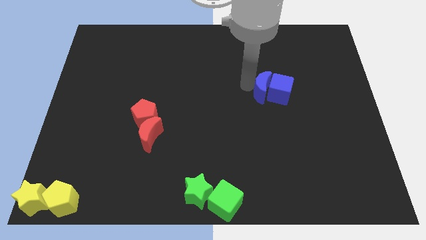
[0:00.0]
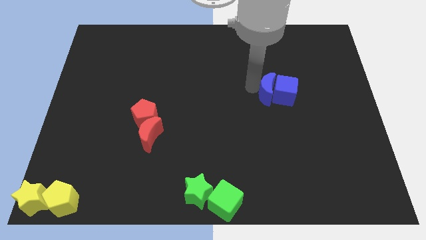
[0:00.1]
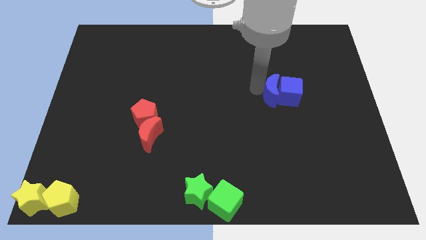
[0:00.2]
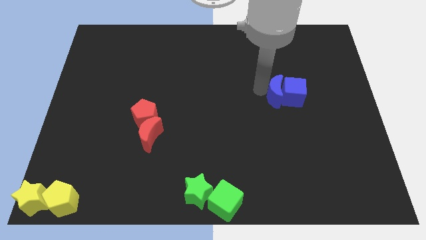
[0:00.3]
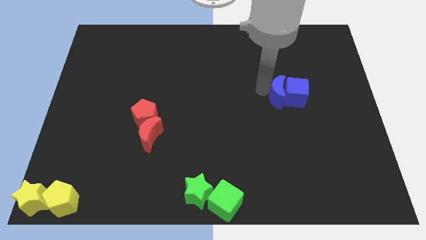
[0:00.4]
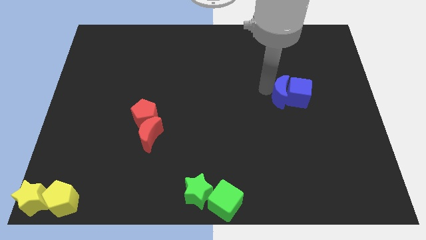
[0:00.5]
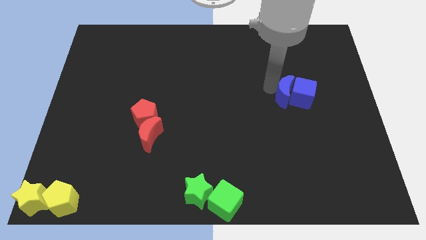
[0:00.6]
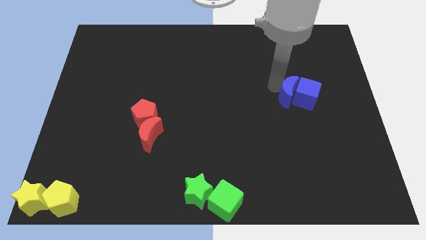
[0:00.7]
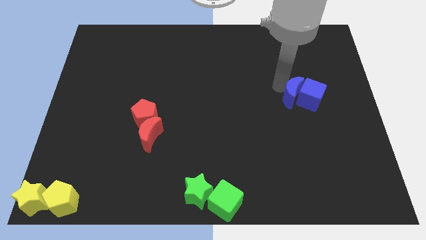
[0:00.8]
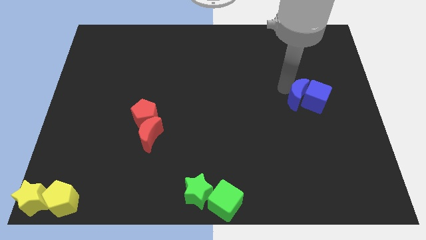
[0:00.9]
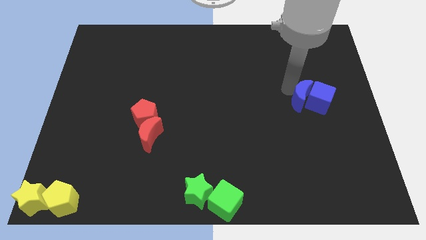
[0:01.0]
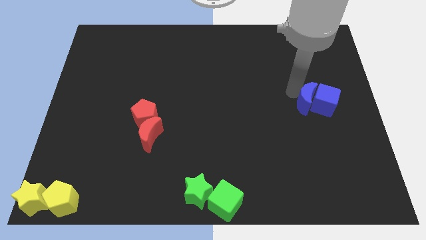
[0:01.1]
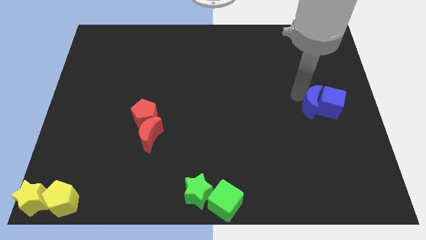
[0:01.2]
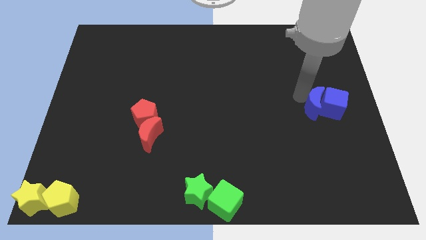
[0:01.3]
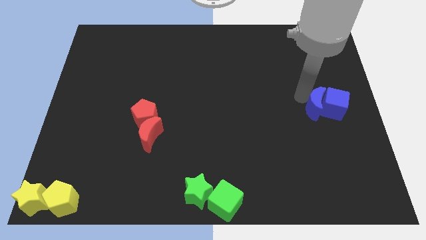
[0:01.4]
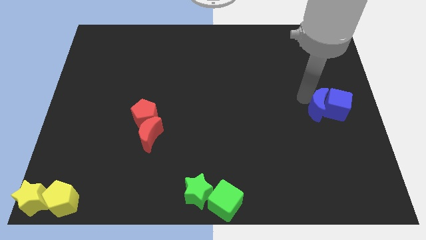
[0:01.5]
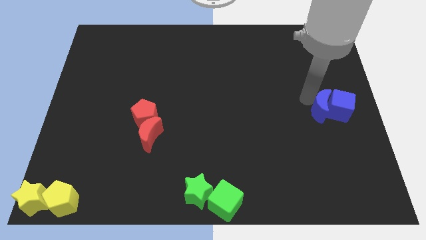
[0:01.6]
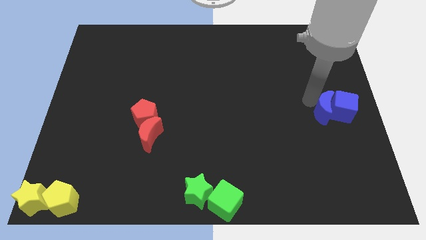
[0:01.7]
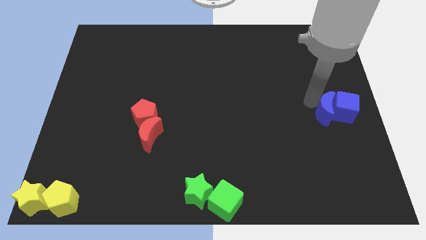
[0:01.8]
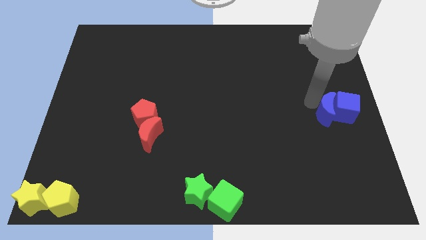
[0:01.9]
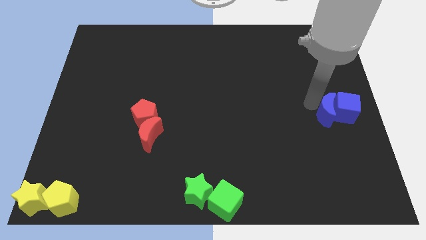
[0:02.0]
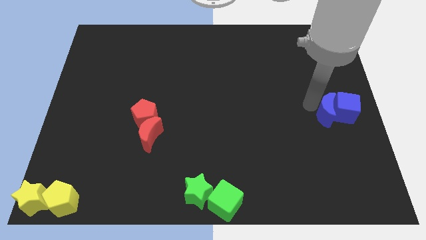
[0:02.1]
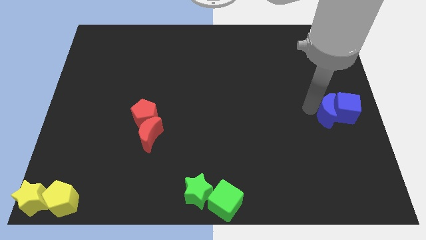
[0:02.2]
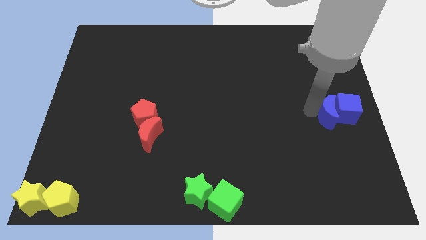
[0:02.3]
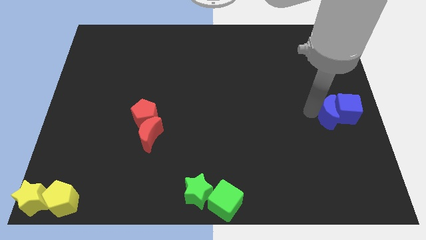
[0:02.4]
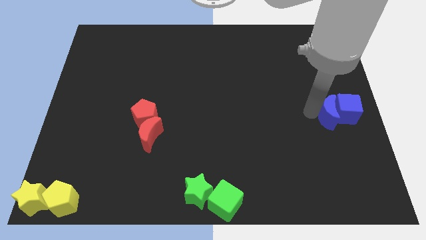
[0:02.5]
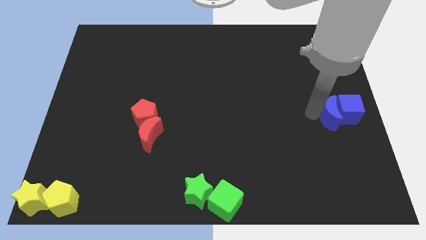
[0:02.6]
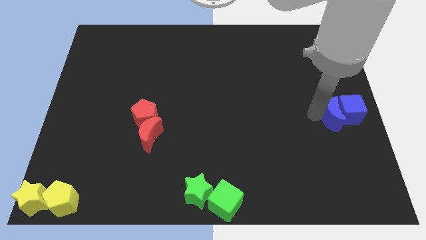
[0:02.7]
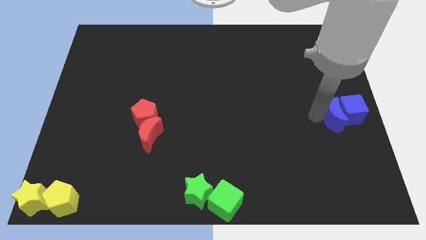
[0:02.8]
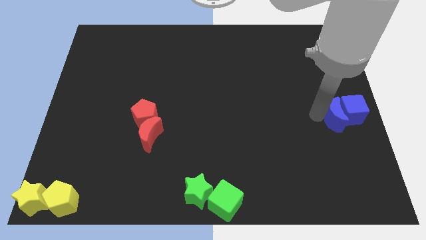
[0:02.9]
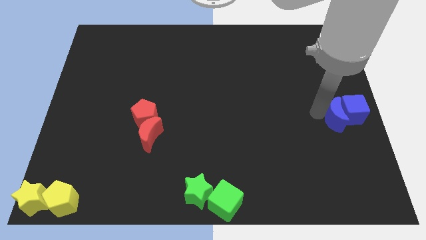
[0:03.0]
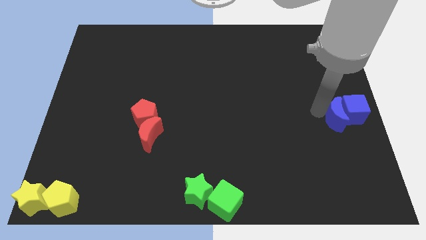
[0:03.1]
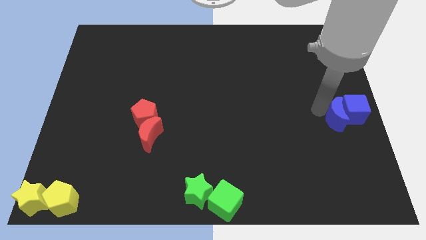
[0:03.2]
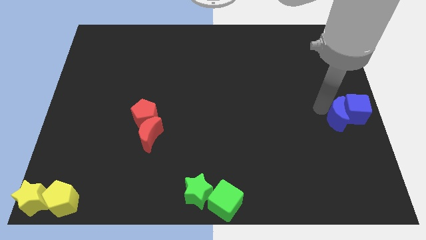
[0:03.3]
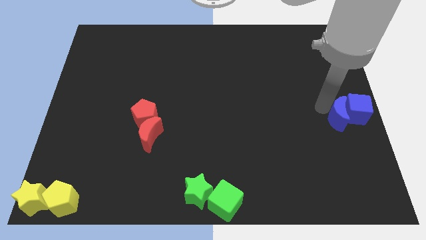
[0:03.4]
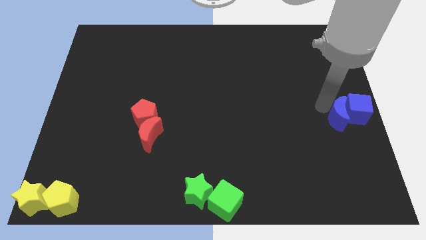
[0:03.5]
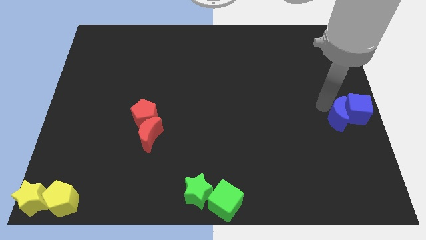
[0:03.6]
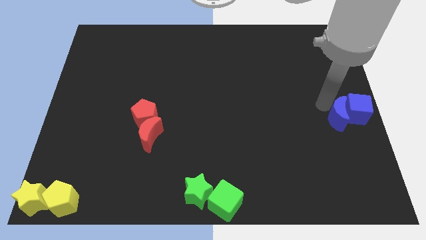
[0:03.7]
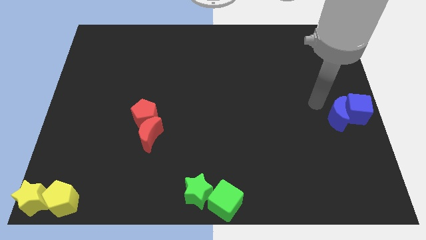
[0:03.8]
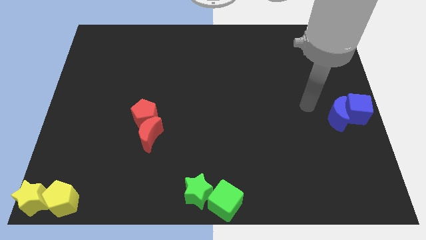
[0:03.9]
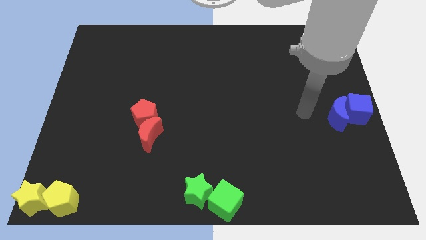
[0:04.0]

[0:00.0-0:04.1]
push the blue crescent with blue cube towards the right center of the board

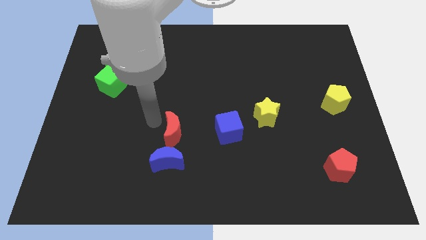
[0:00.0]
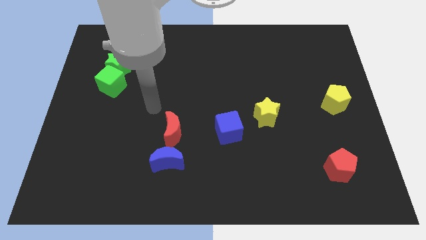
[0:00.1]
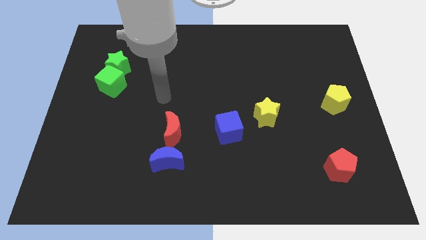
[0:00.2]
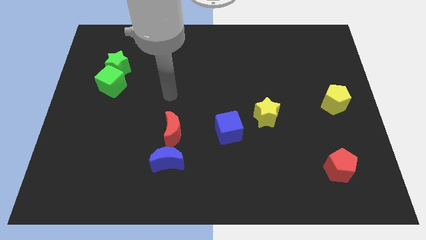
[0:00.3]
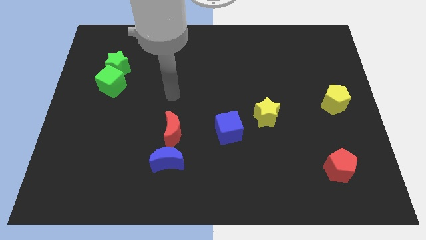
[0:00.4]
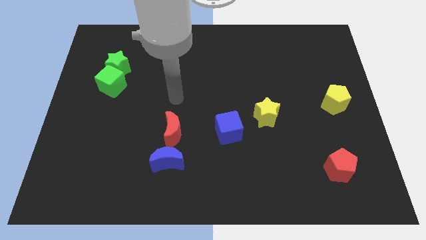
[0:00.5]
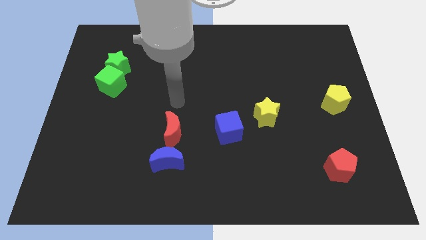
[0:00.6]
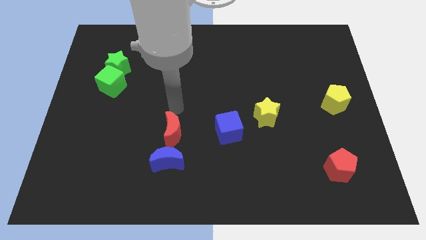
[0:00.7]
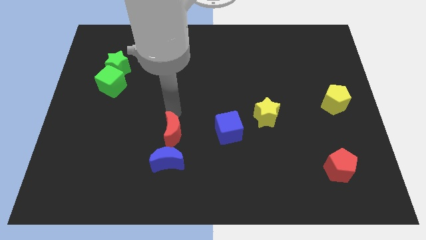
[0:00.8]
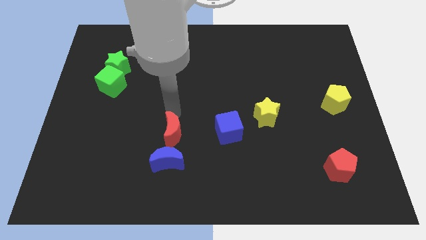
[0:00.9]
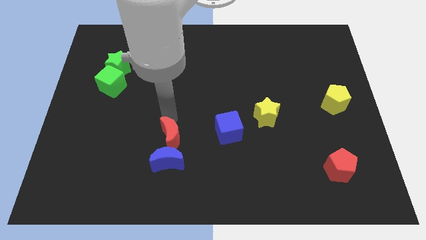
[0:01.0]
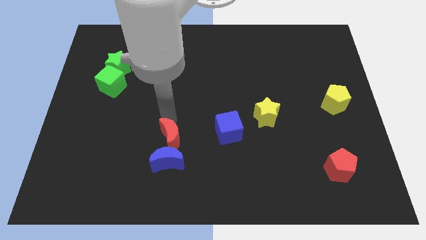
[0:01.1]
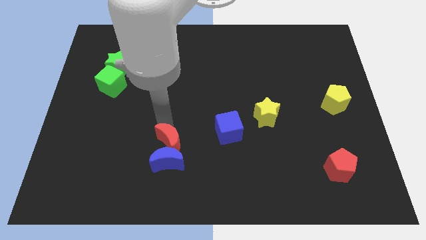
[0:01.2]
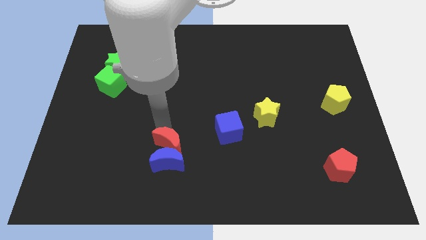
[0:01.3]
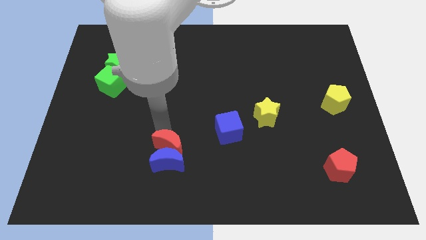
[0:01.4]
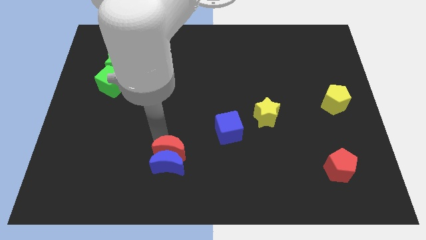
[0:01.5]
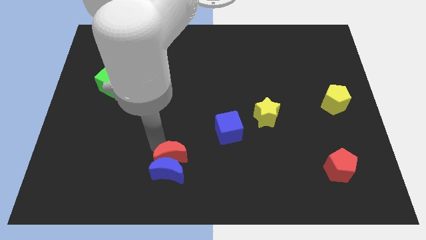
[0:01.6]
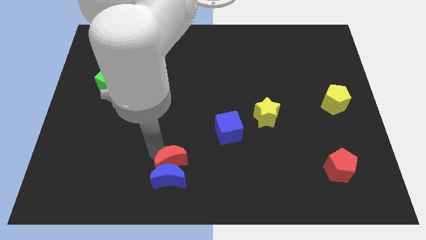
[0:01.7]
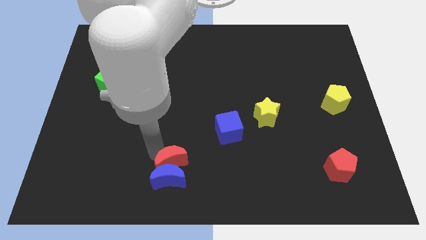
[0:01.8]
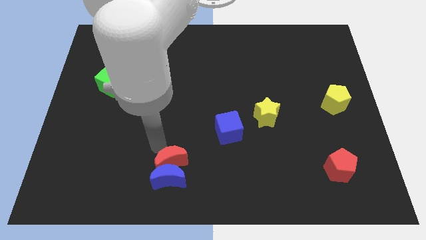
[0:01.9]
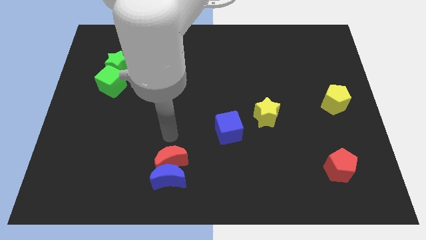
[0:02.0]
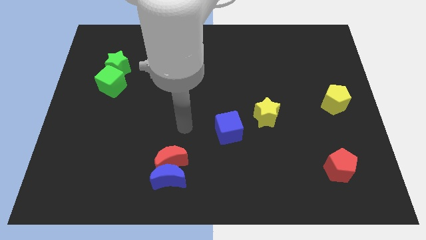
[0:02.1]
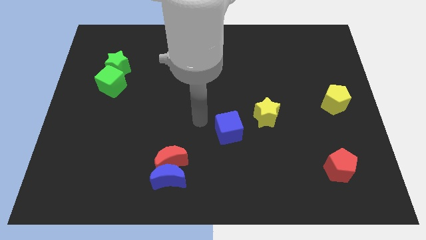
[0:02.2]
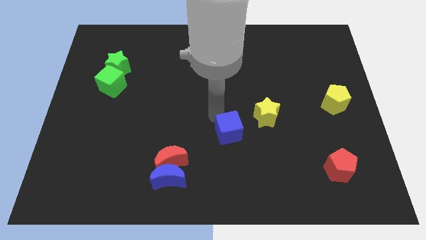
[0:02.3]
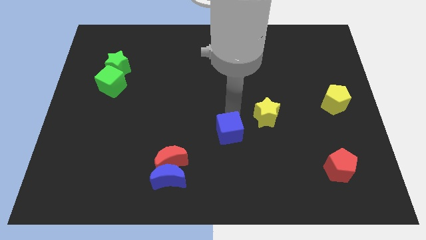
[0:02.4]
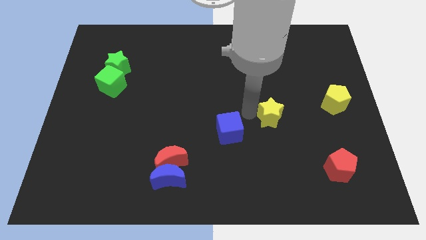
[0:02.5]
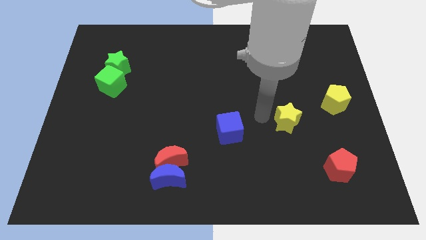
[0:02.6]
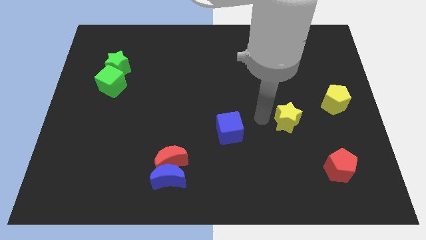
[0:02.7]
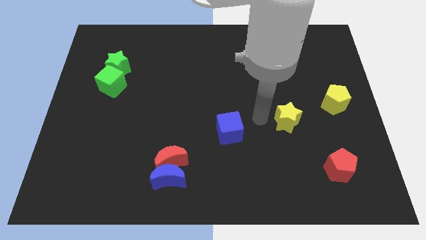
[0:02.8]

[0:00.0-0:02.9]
move red crescent along with blue crescent towards the bottom of the board

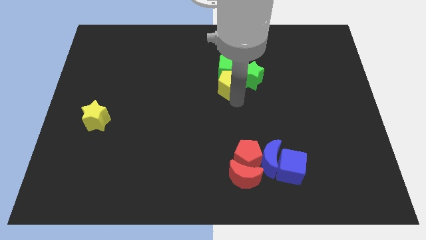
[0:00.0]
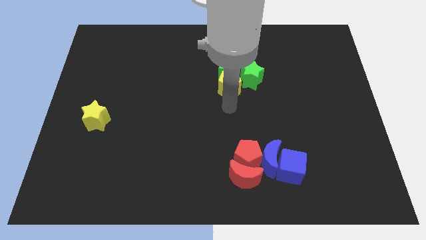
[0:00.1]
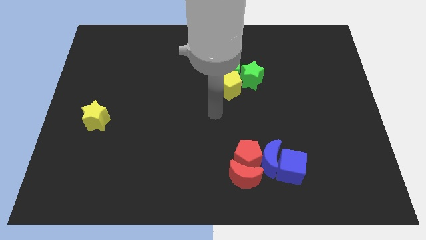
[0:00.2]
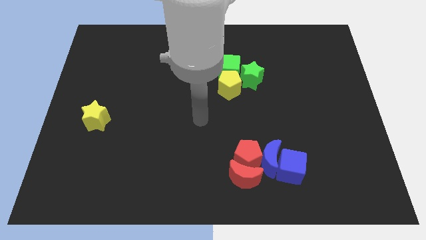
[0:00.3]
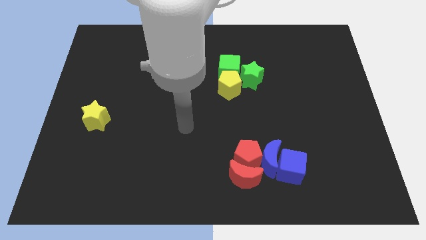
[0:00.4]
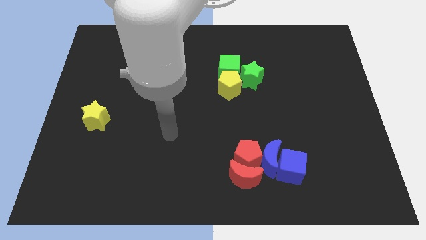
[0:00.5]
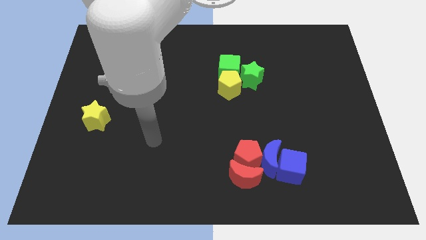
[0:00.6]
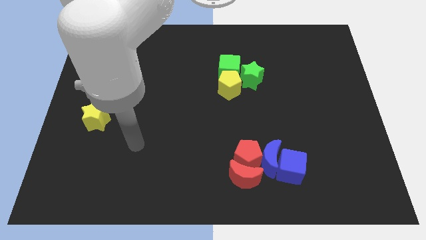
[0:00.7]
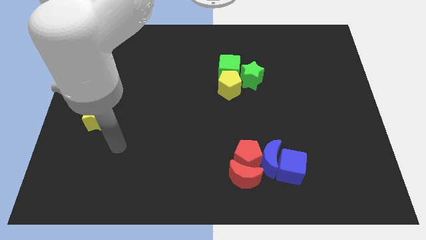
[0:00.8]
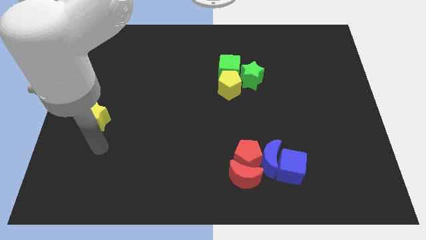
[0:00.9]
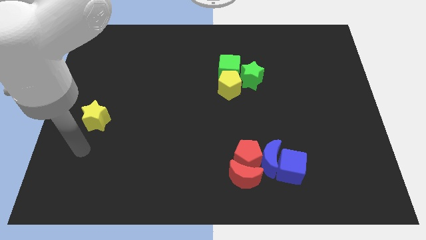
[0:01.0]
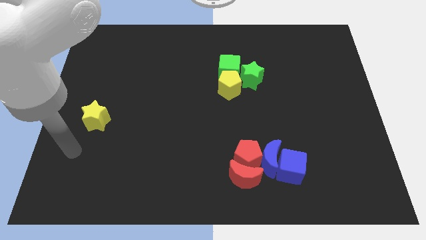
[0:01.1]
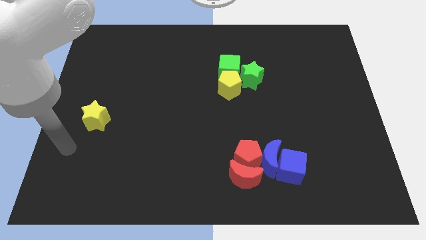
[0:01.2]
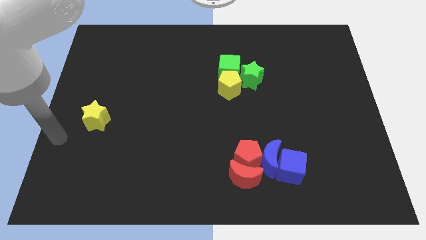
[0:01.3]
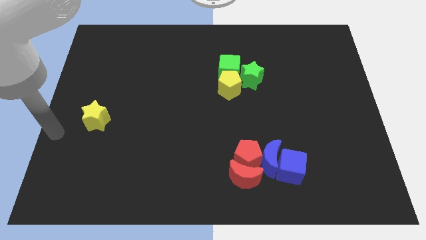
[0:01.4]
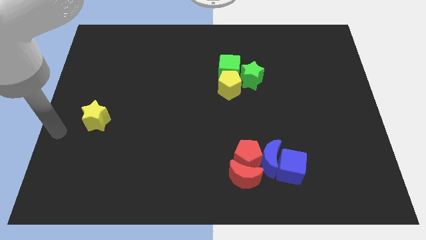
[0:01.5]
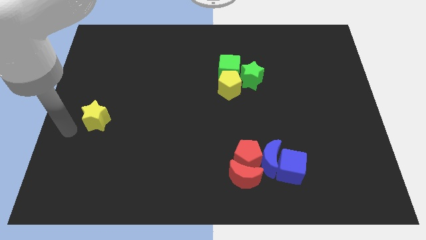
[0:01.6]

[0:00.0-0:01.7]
place your arm at the left of the yellow star

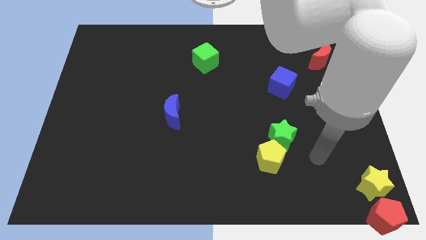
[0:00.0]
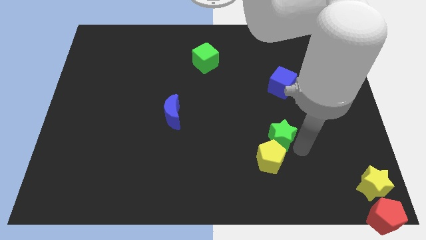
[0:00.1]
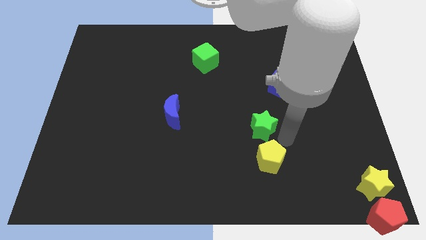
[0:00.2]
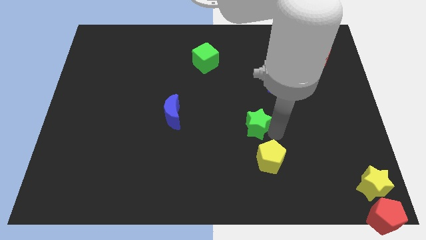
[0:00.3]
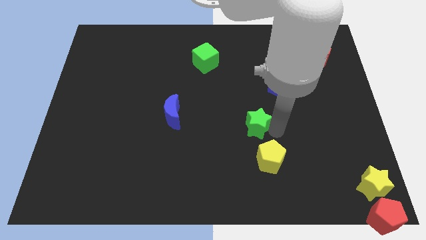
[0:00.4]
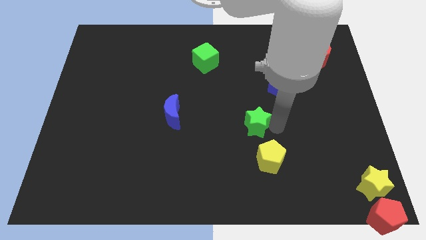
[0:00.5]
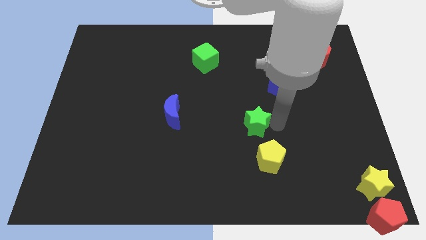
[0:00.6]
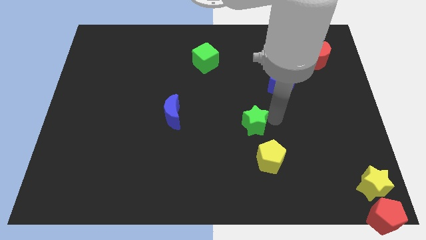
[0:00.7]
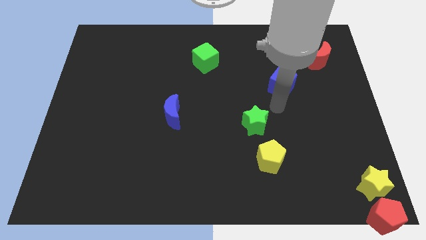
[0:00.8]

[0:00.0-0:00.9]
separate the green star from yellow pentagon
